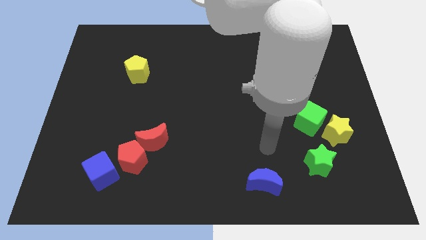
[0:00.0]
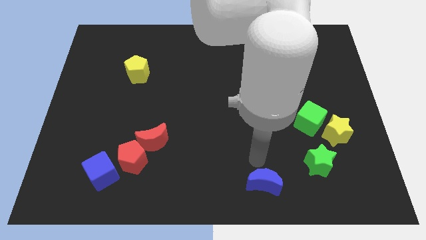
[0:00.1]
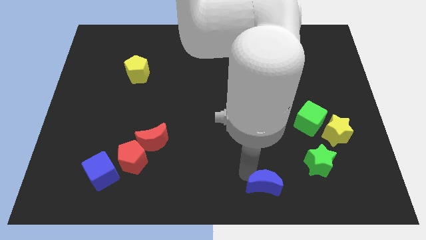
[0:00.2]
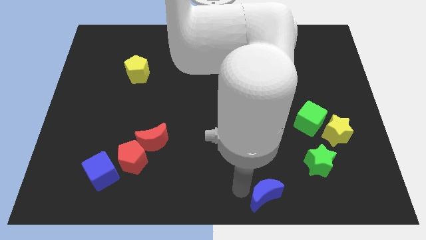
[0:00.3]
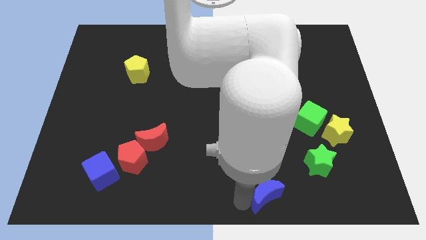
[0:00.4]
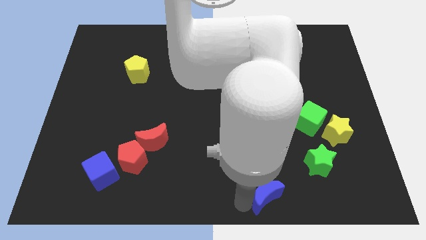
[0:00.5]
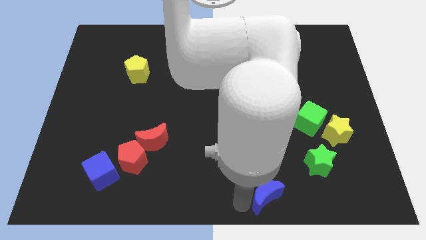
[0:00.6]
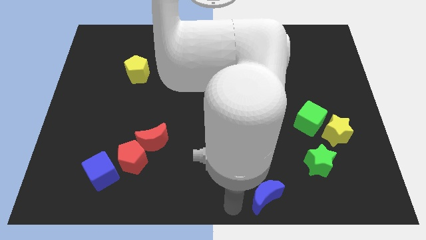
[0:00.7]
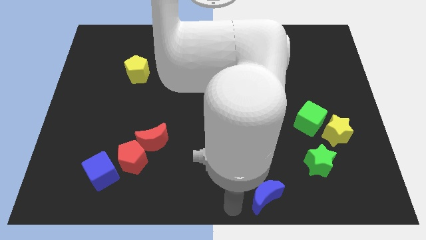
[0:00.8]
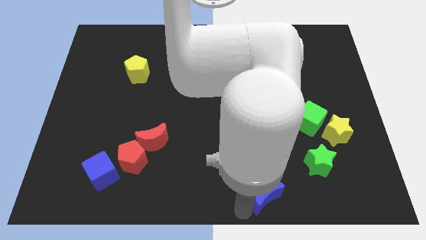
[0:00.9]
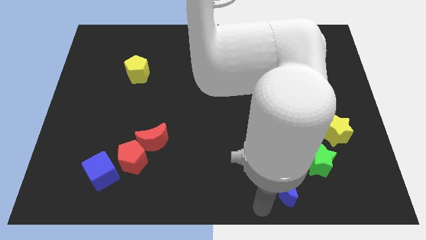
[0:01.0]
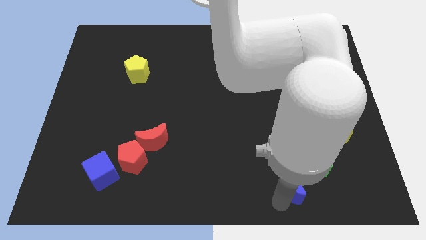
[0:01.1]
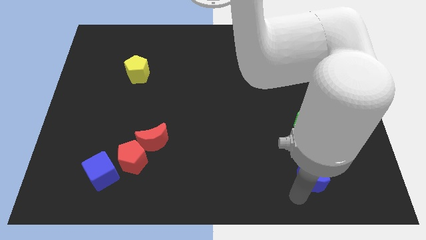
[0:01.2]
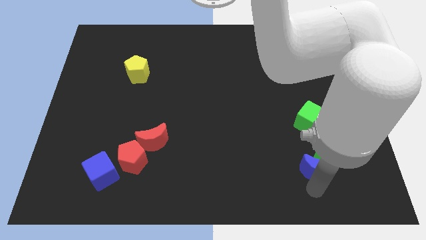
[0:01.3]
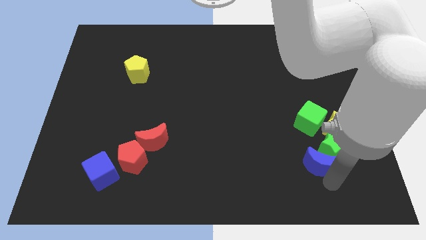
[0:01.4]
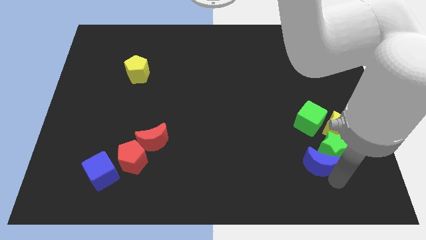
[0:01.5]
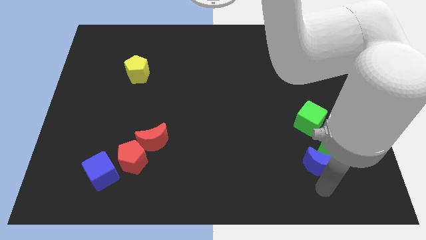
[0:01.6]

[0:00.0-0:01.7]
move the blue moon into the green star

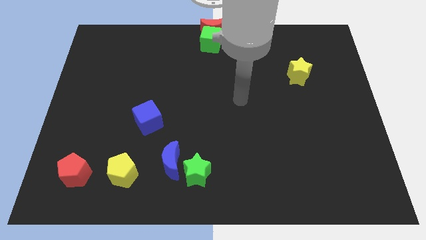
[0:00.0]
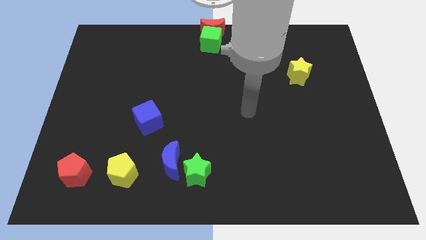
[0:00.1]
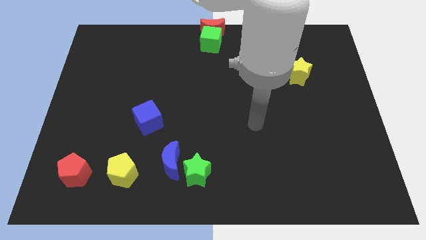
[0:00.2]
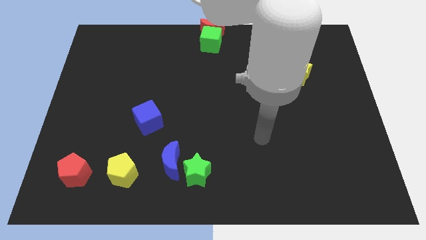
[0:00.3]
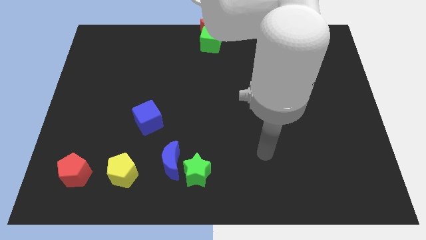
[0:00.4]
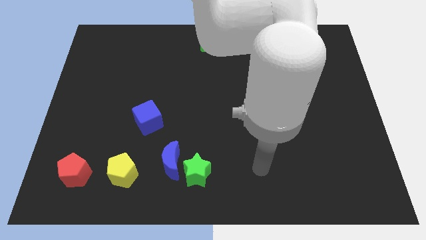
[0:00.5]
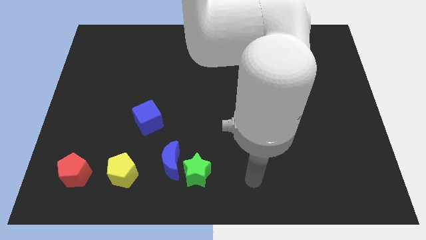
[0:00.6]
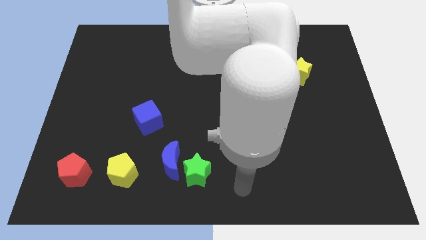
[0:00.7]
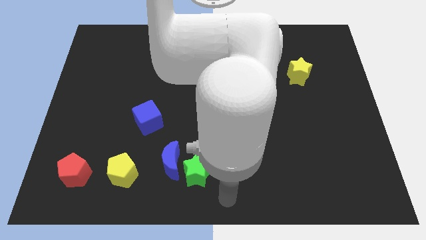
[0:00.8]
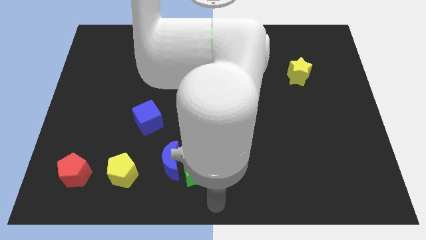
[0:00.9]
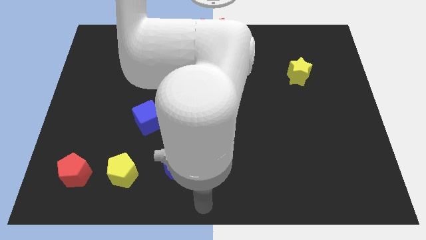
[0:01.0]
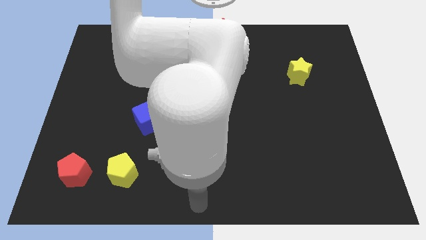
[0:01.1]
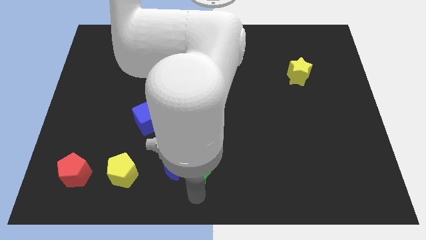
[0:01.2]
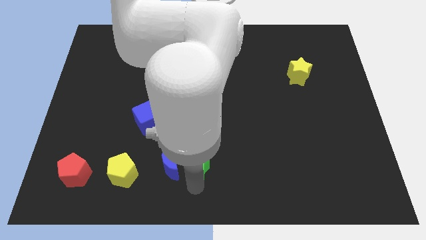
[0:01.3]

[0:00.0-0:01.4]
touch the bottom side of the green star

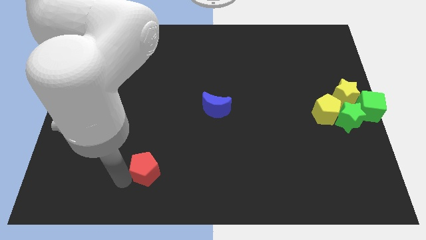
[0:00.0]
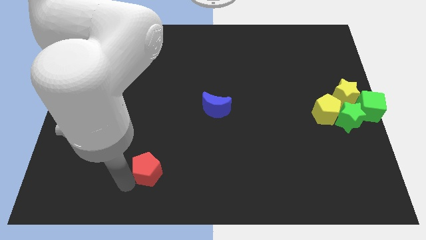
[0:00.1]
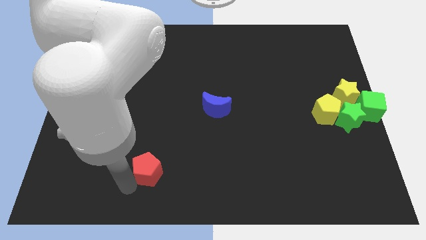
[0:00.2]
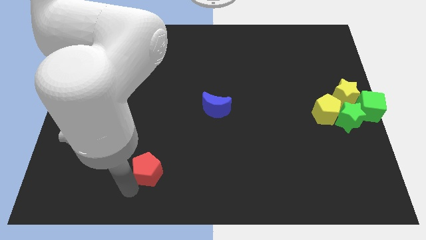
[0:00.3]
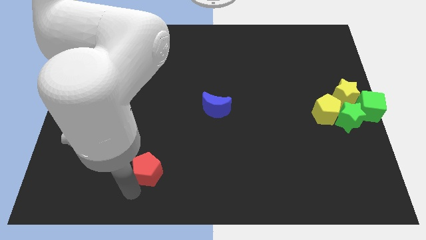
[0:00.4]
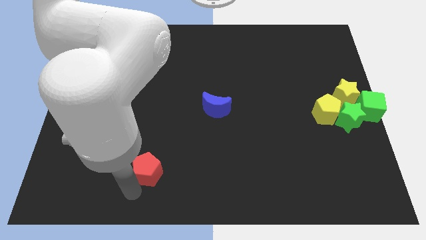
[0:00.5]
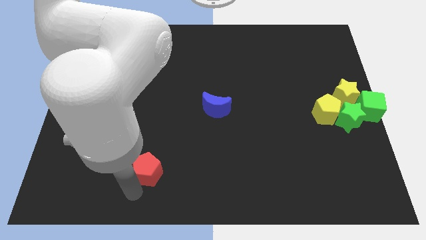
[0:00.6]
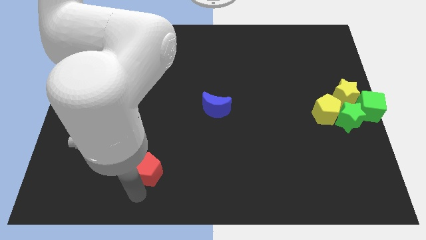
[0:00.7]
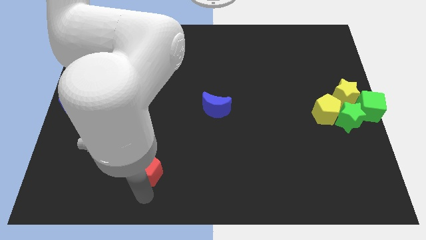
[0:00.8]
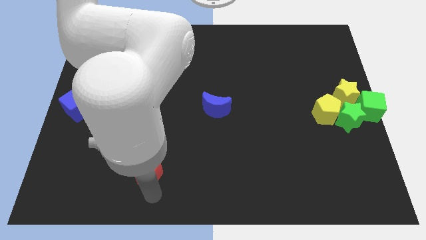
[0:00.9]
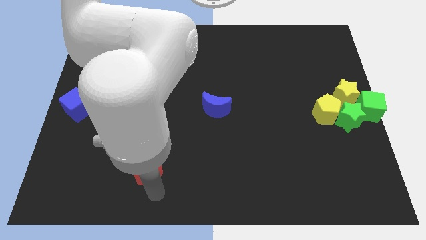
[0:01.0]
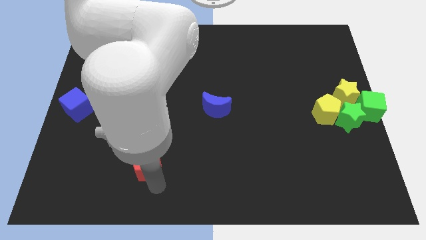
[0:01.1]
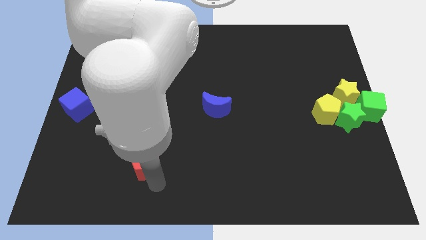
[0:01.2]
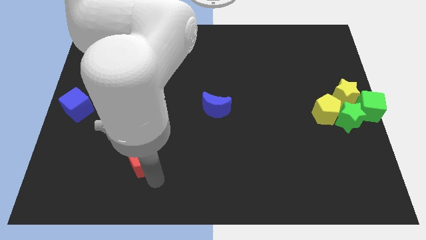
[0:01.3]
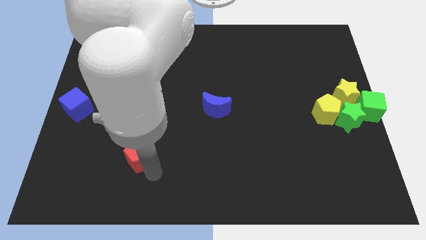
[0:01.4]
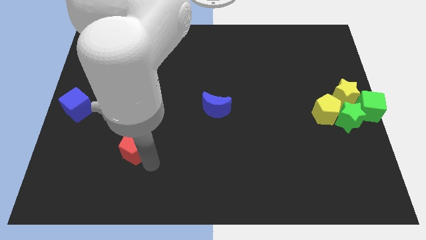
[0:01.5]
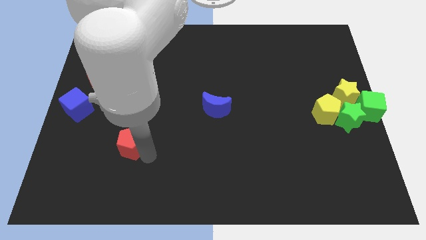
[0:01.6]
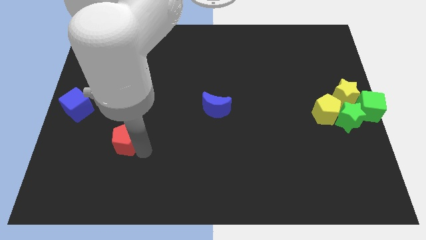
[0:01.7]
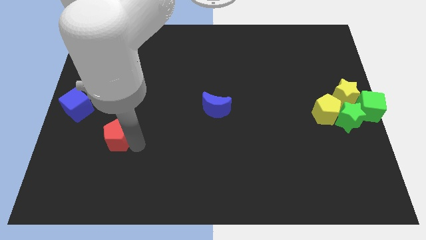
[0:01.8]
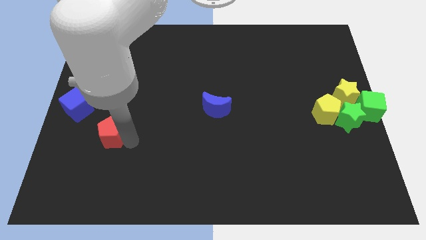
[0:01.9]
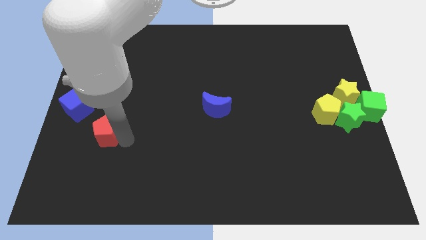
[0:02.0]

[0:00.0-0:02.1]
push the red pentagon towards the blue cube

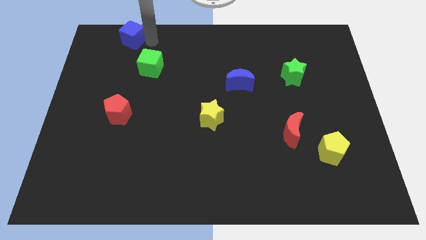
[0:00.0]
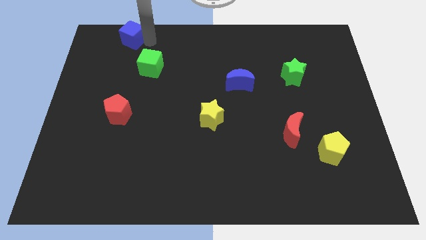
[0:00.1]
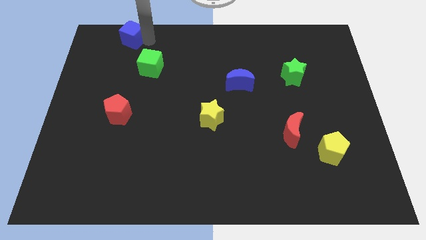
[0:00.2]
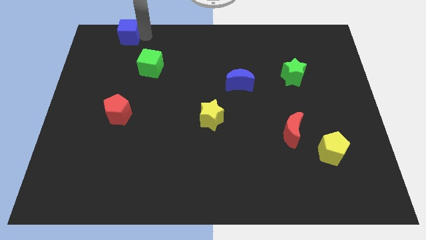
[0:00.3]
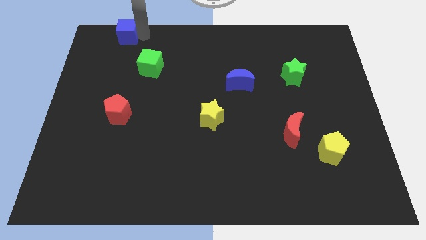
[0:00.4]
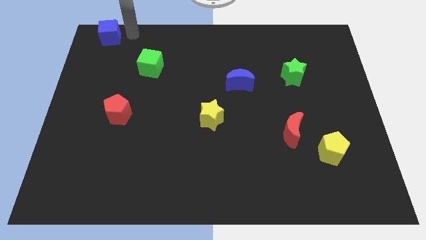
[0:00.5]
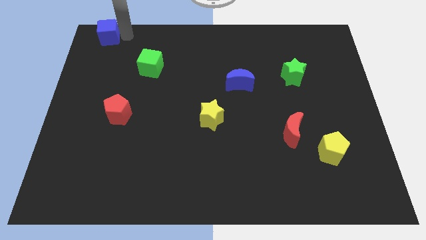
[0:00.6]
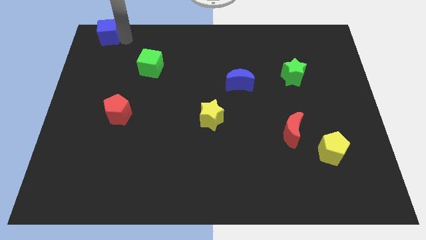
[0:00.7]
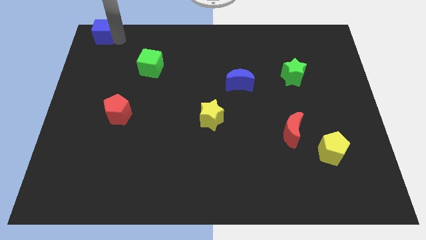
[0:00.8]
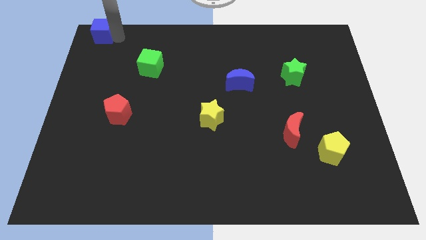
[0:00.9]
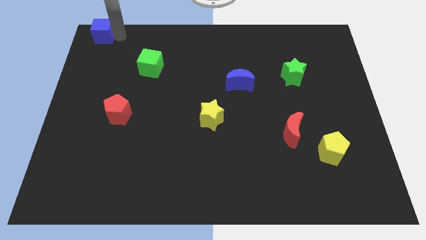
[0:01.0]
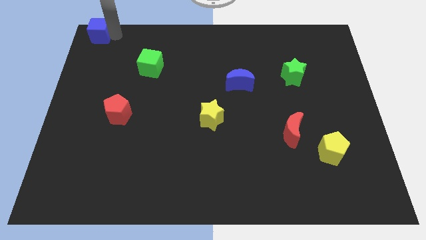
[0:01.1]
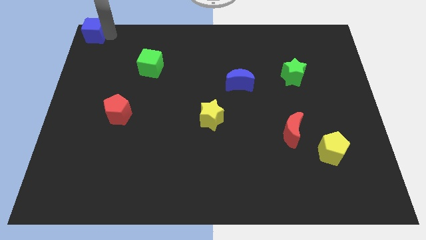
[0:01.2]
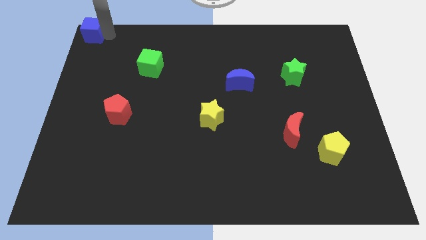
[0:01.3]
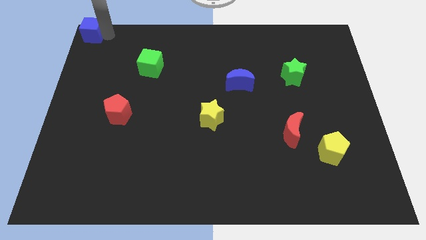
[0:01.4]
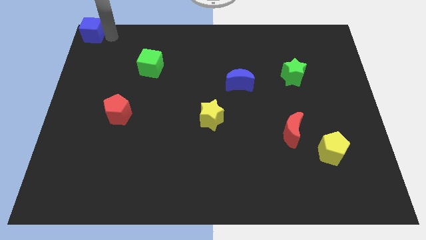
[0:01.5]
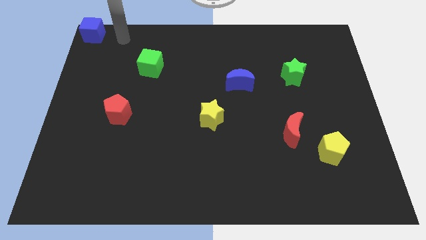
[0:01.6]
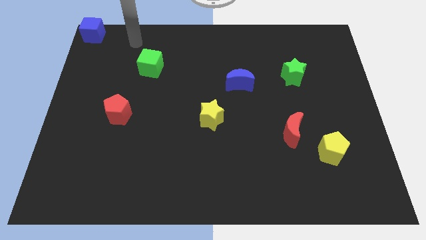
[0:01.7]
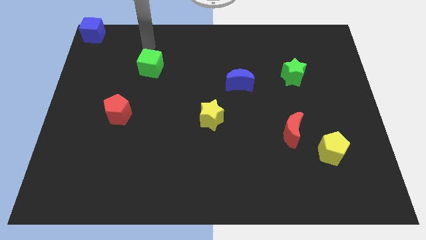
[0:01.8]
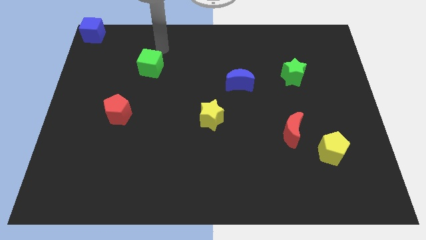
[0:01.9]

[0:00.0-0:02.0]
place the blue cube at the top left corner of the board

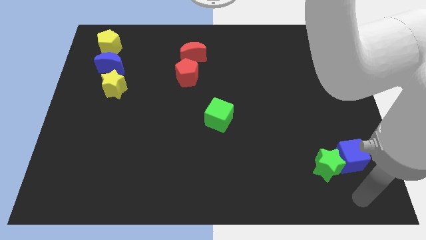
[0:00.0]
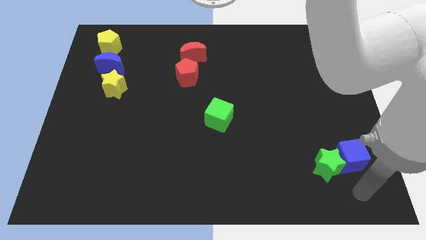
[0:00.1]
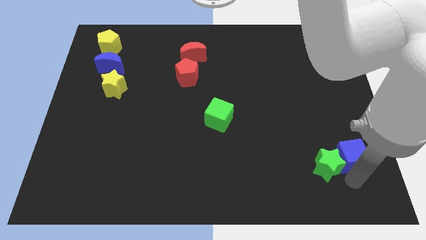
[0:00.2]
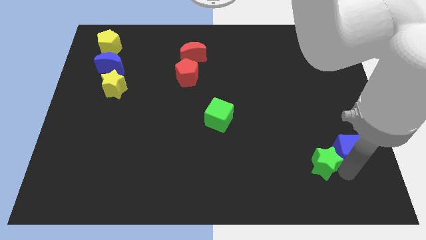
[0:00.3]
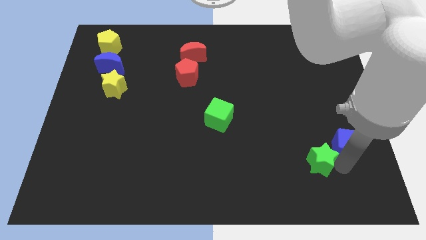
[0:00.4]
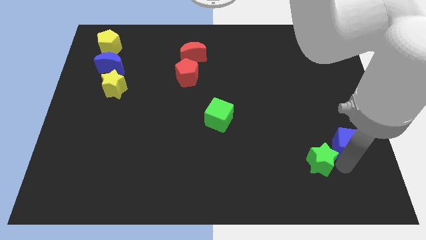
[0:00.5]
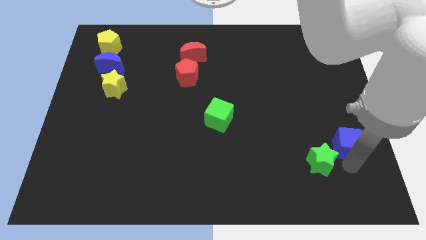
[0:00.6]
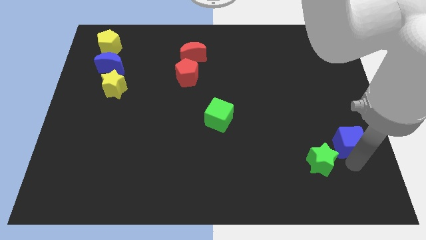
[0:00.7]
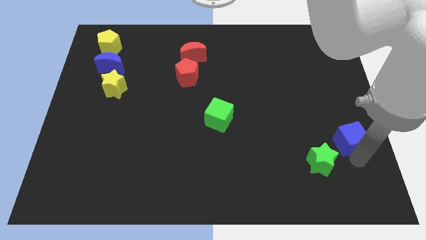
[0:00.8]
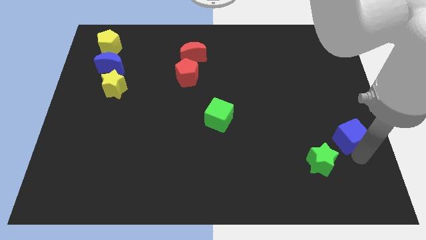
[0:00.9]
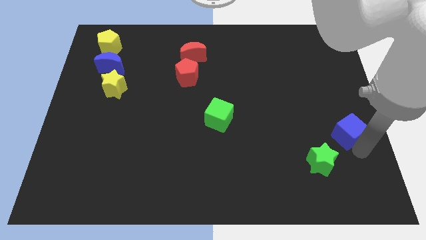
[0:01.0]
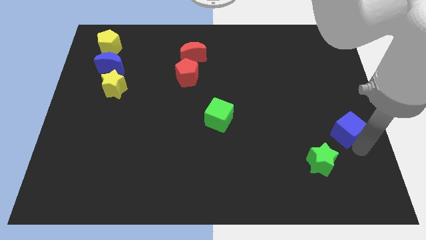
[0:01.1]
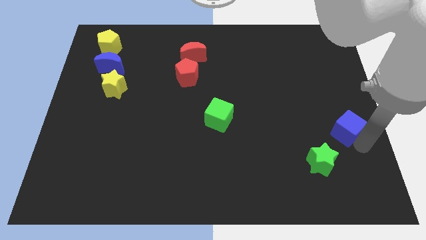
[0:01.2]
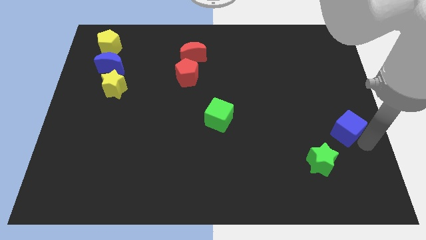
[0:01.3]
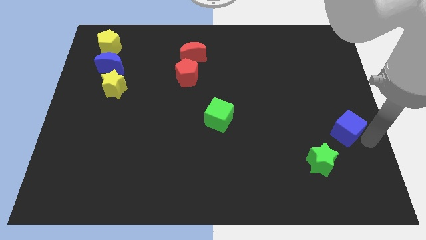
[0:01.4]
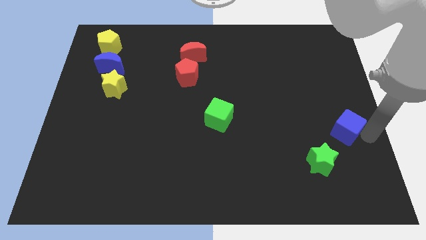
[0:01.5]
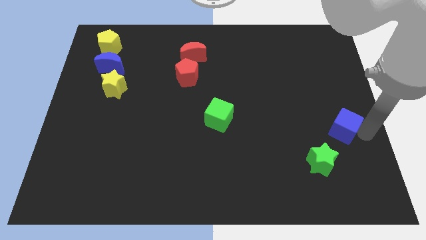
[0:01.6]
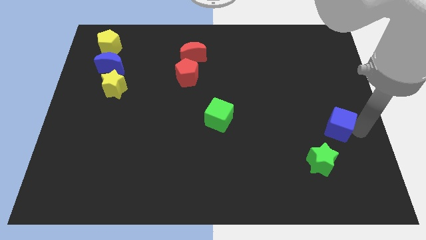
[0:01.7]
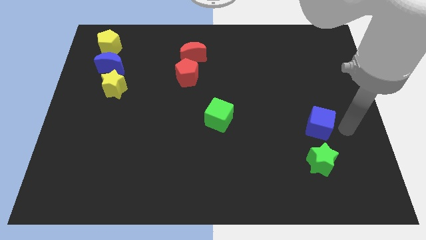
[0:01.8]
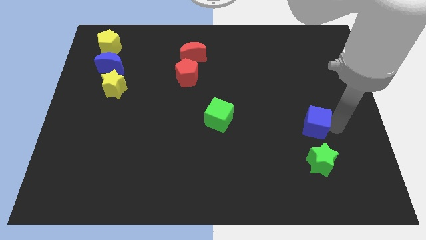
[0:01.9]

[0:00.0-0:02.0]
put the blue cube at the top side of the green star
